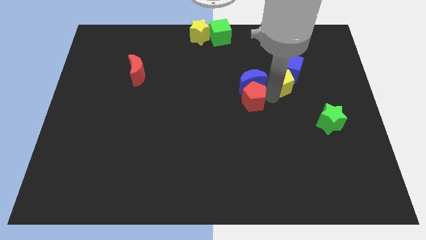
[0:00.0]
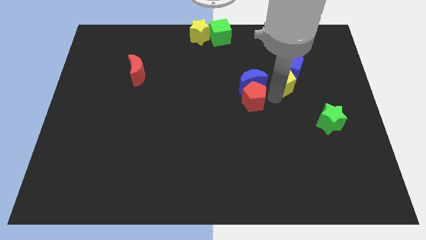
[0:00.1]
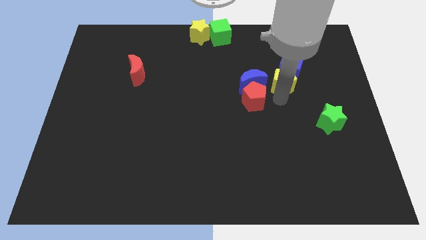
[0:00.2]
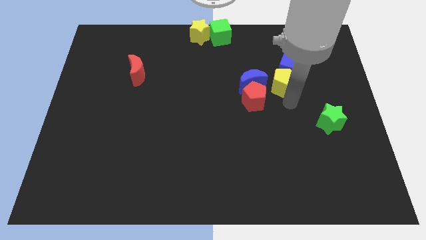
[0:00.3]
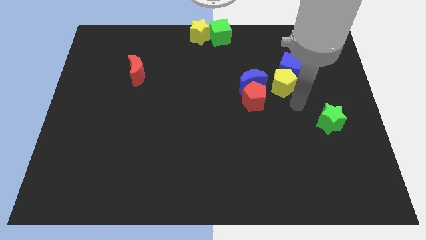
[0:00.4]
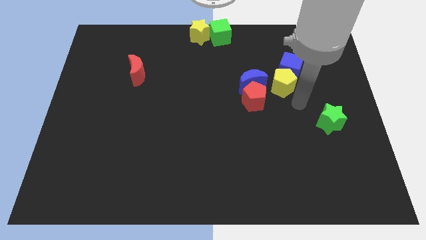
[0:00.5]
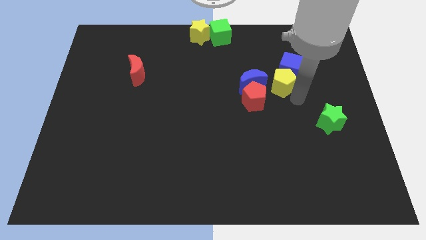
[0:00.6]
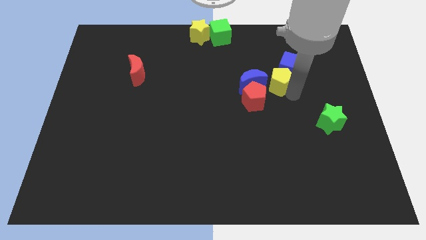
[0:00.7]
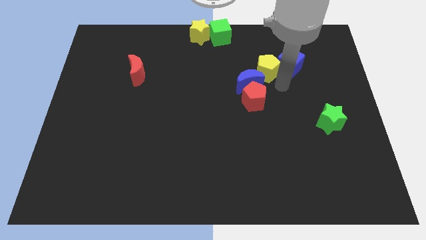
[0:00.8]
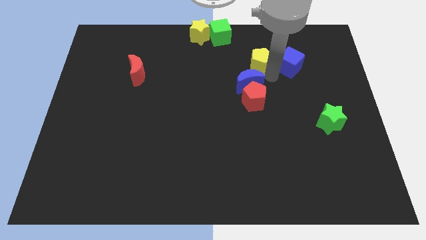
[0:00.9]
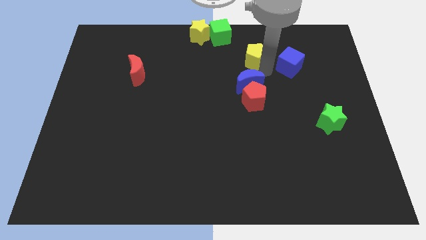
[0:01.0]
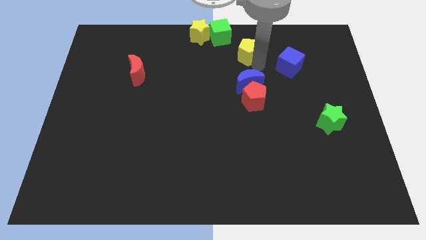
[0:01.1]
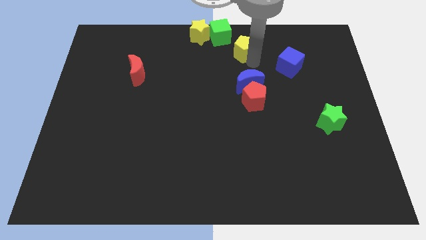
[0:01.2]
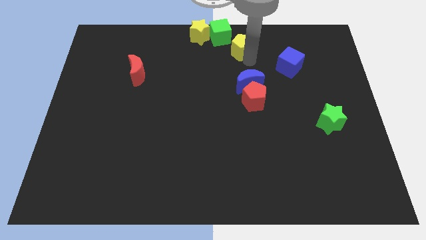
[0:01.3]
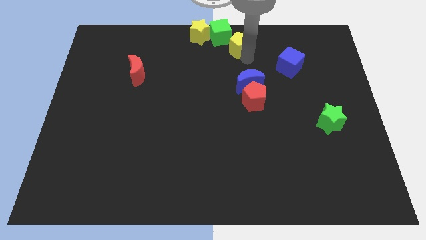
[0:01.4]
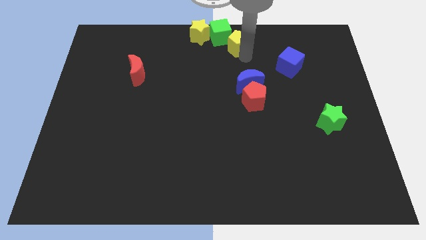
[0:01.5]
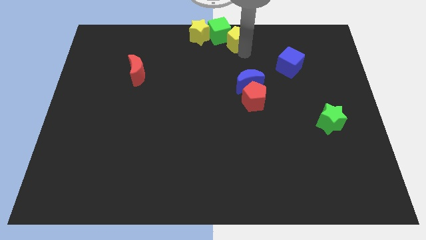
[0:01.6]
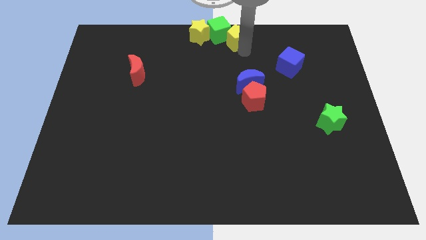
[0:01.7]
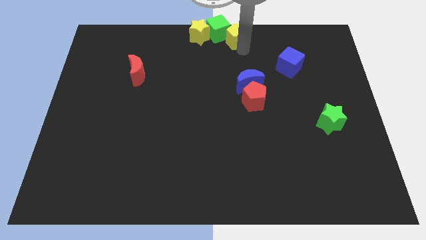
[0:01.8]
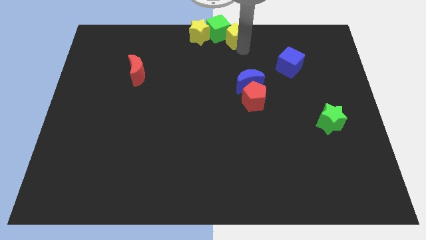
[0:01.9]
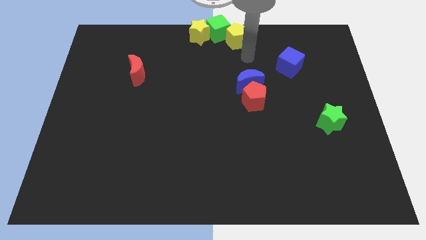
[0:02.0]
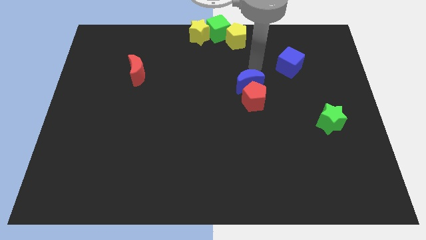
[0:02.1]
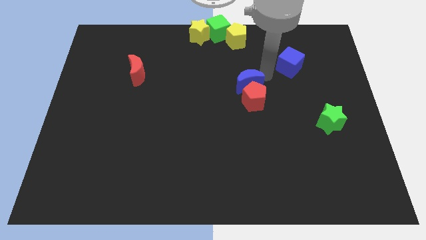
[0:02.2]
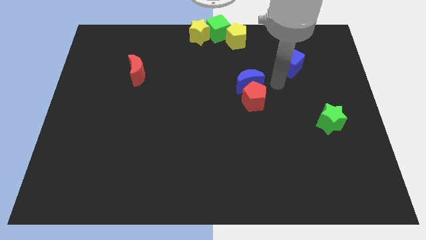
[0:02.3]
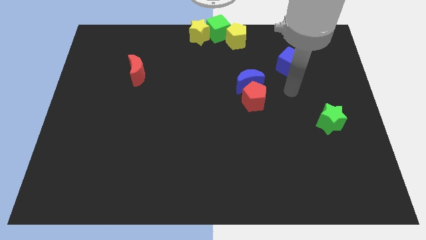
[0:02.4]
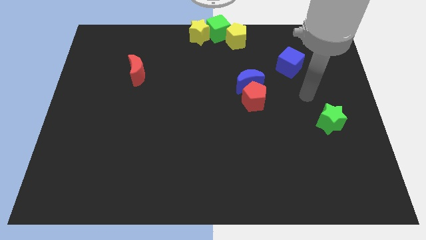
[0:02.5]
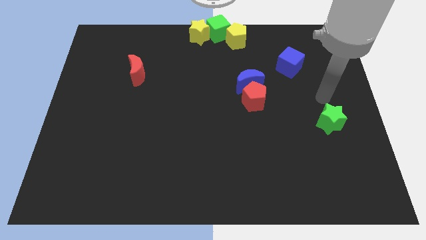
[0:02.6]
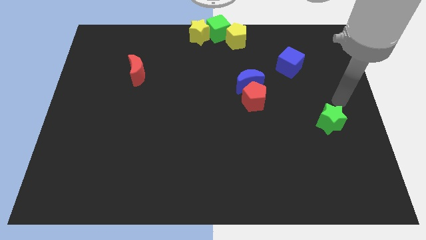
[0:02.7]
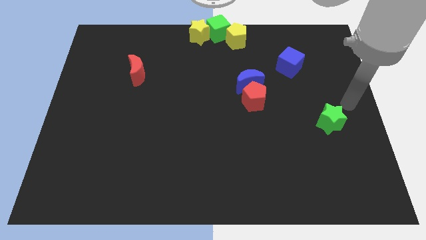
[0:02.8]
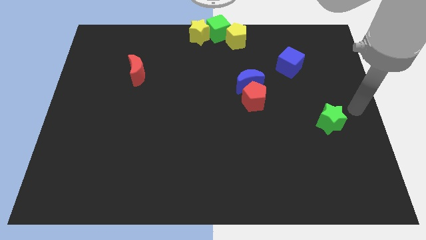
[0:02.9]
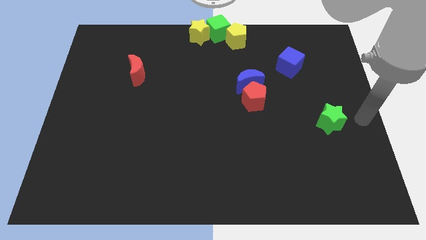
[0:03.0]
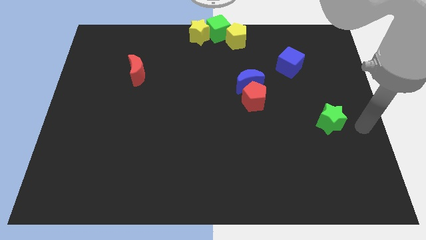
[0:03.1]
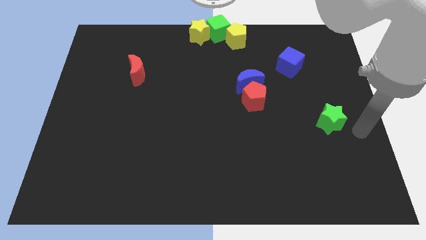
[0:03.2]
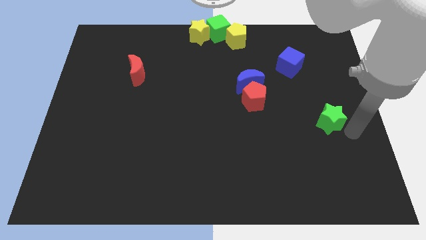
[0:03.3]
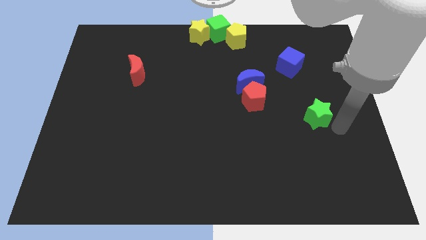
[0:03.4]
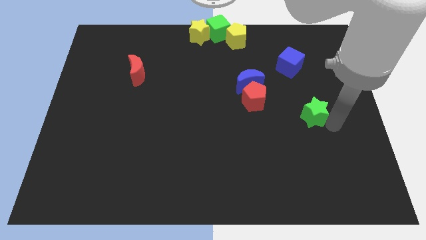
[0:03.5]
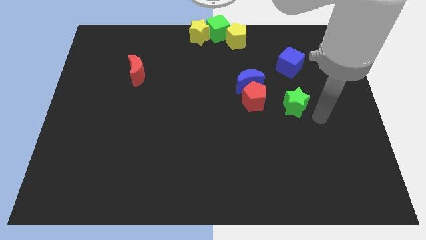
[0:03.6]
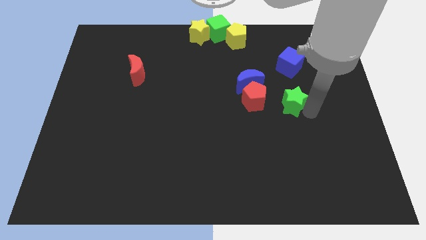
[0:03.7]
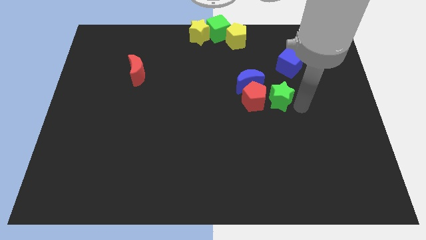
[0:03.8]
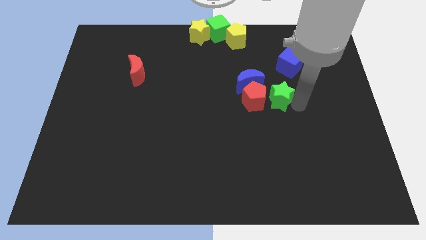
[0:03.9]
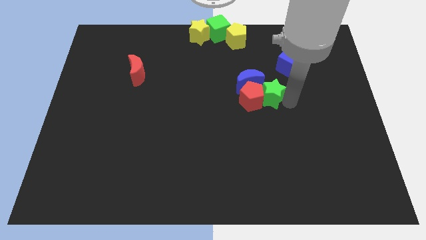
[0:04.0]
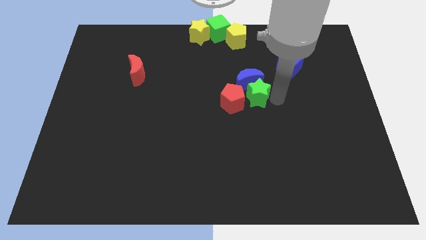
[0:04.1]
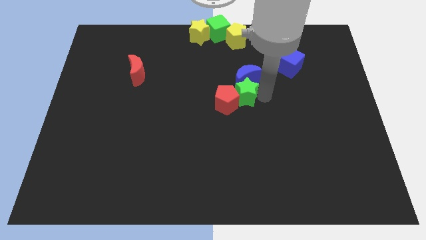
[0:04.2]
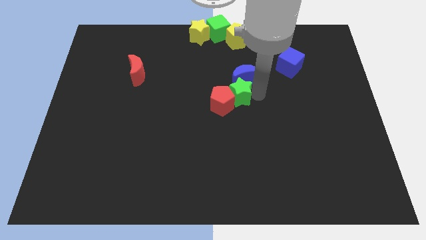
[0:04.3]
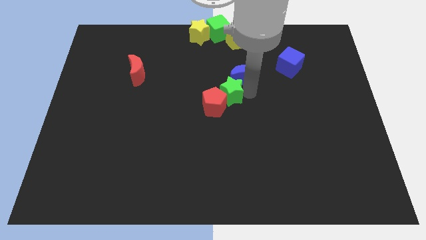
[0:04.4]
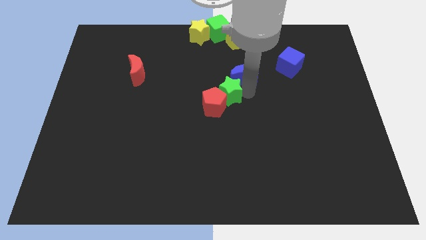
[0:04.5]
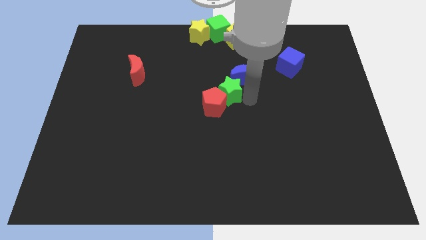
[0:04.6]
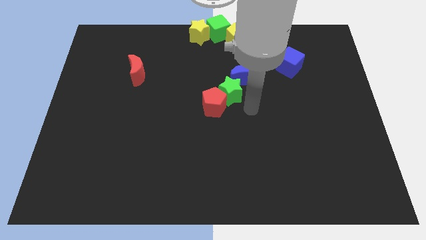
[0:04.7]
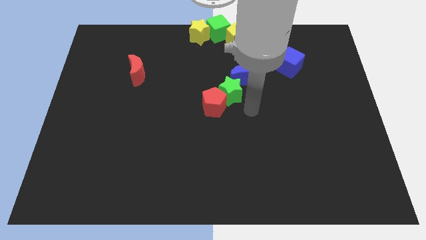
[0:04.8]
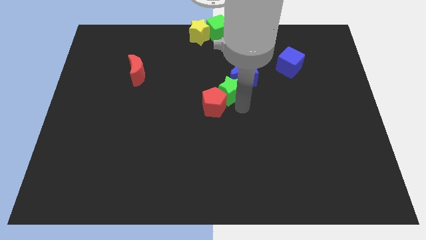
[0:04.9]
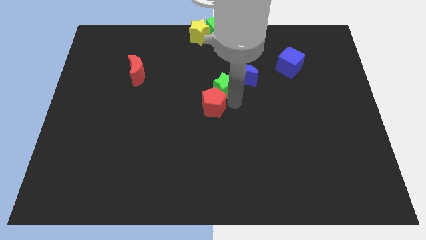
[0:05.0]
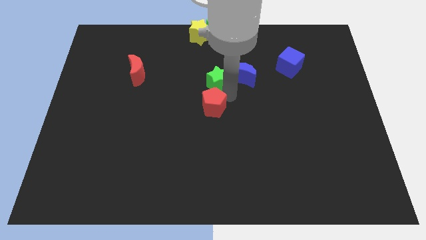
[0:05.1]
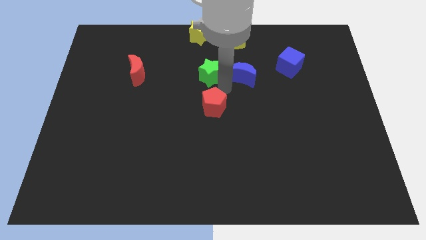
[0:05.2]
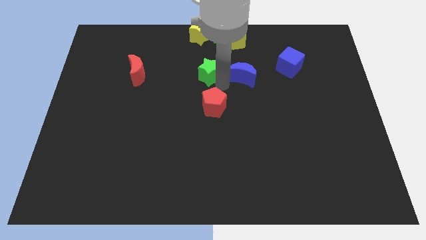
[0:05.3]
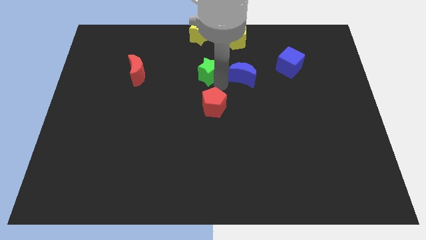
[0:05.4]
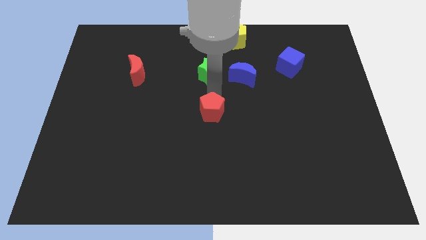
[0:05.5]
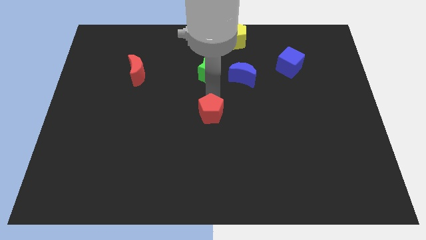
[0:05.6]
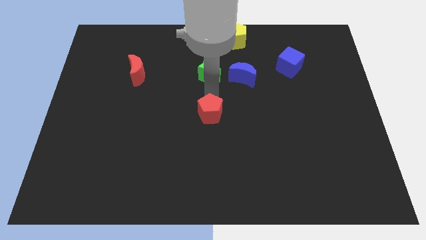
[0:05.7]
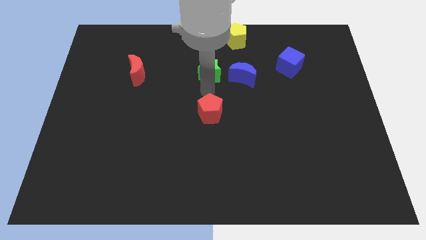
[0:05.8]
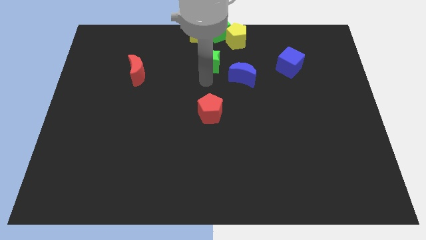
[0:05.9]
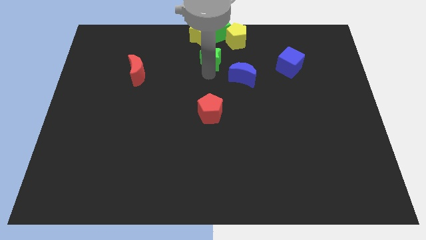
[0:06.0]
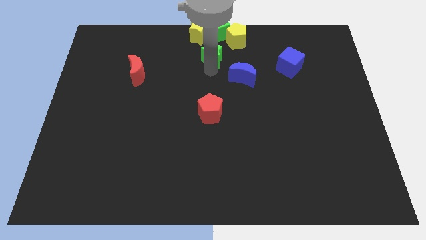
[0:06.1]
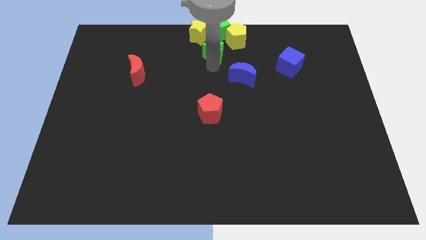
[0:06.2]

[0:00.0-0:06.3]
move the green star and red pentagon slightly left

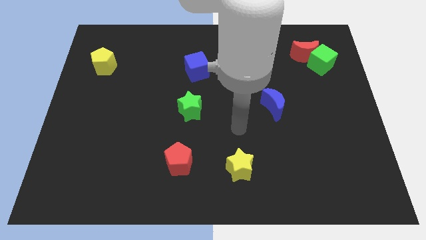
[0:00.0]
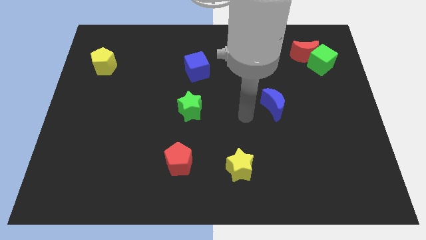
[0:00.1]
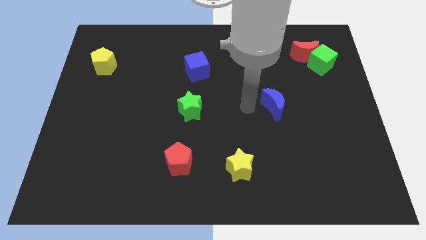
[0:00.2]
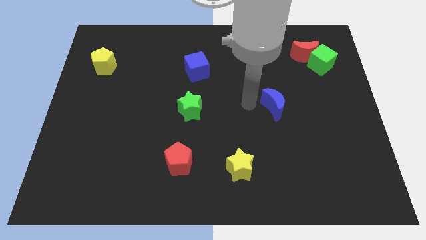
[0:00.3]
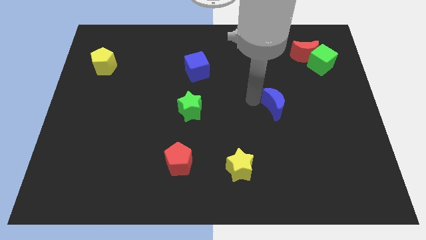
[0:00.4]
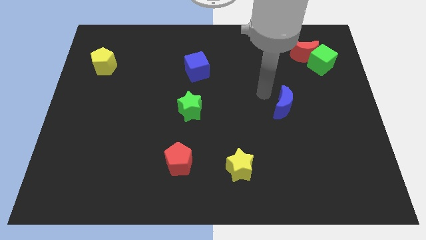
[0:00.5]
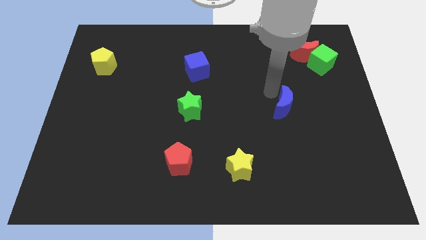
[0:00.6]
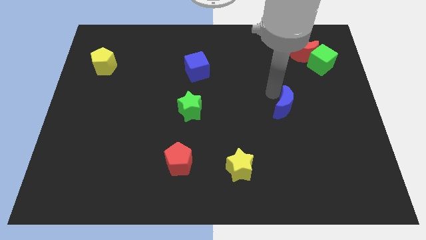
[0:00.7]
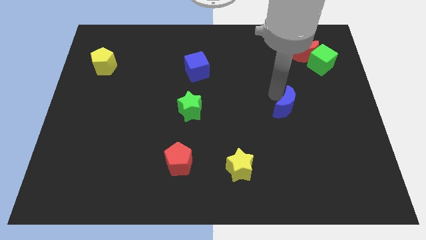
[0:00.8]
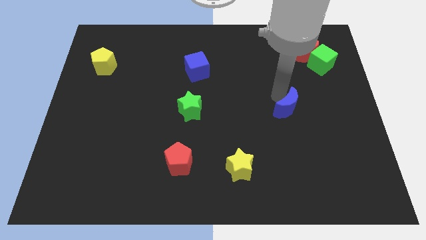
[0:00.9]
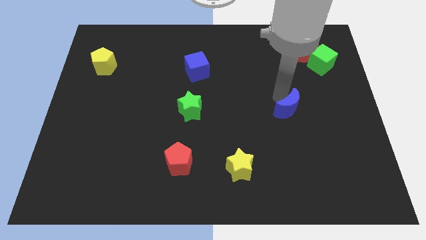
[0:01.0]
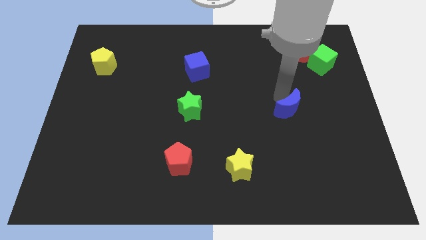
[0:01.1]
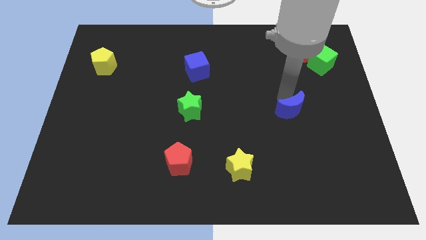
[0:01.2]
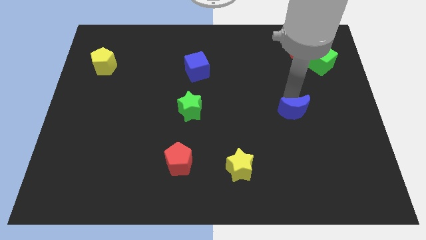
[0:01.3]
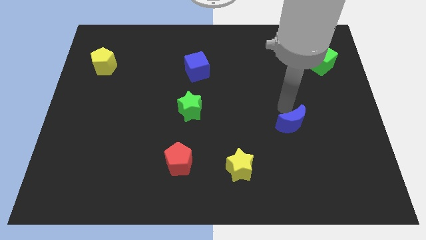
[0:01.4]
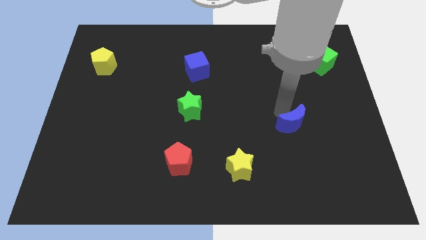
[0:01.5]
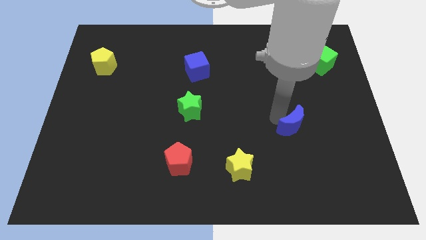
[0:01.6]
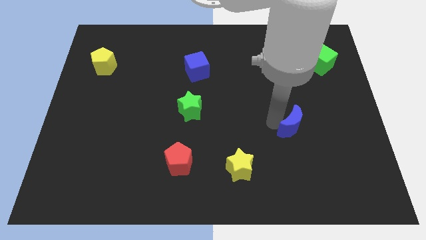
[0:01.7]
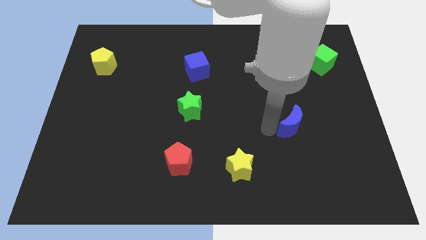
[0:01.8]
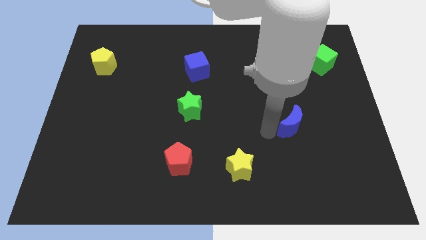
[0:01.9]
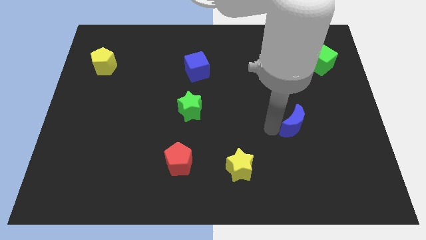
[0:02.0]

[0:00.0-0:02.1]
place the blue moon diagonally to the right of the yellow star

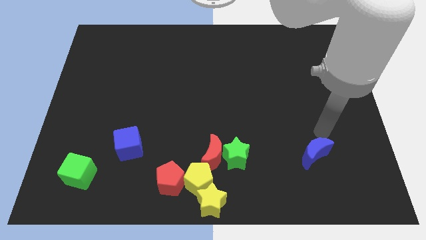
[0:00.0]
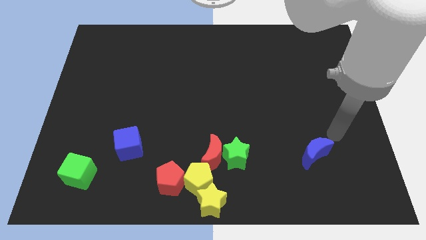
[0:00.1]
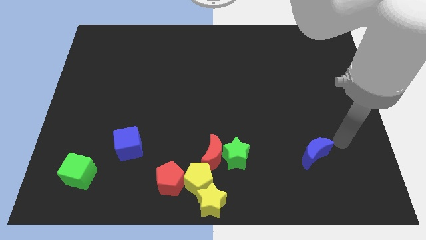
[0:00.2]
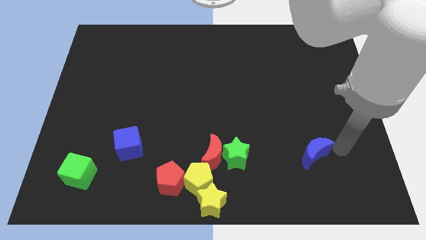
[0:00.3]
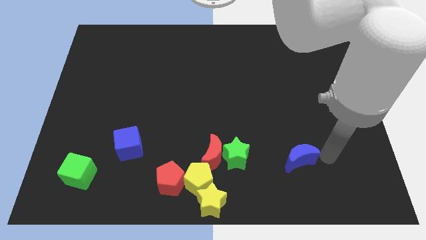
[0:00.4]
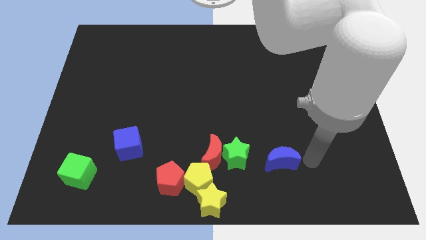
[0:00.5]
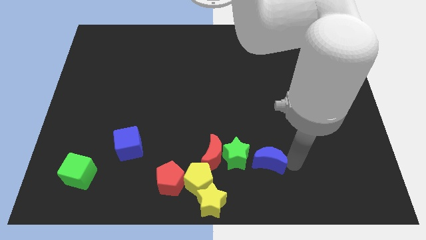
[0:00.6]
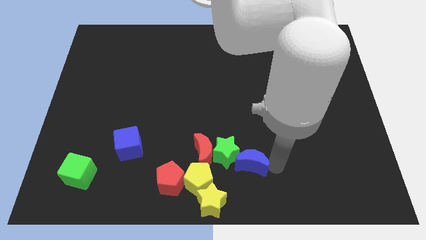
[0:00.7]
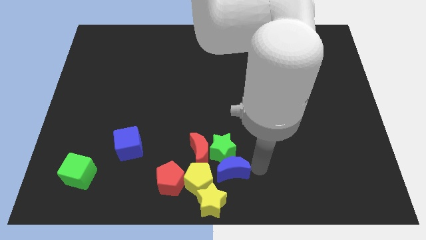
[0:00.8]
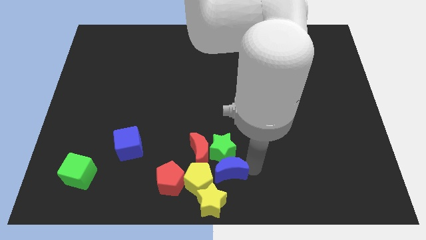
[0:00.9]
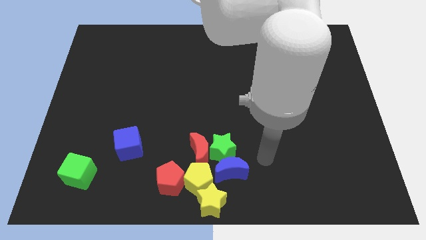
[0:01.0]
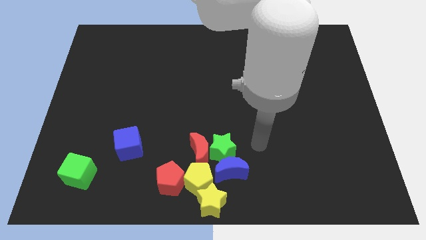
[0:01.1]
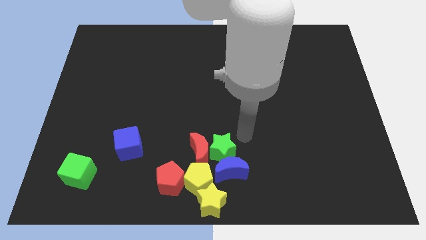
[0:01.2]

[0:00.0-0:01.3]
touch green star with blue crescent
